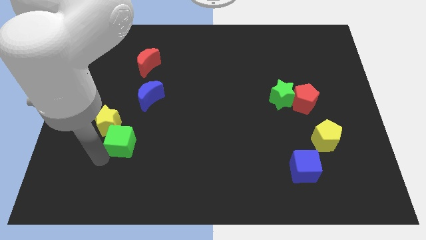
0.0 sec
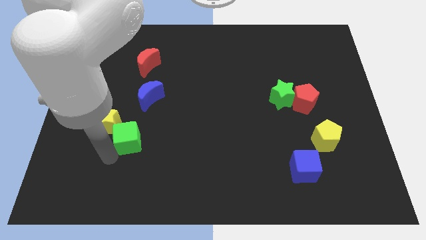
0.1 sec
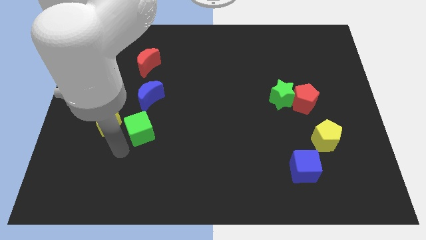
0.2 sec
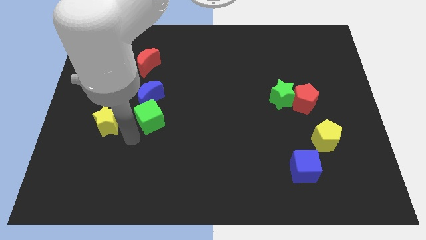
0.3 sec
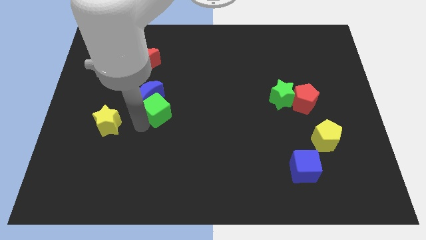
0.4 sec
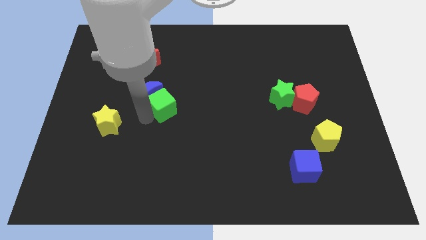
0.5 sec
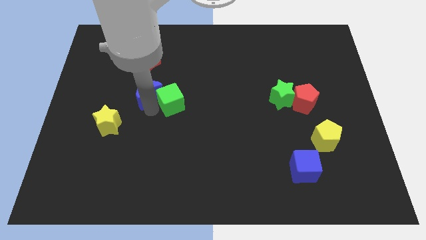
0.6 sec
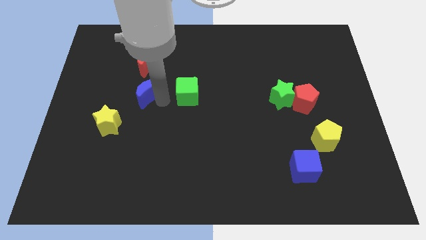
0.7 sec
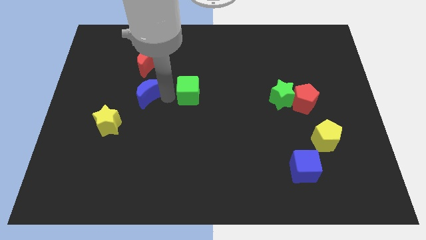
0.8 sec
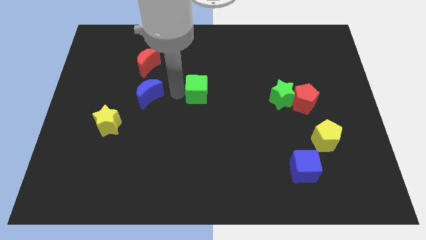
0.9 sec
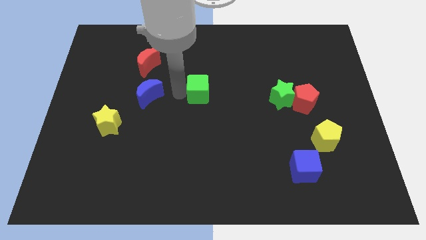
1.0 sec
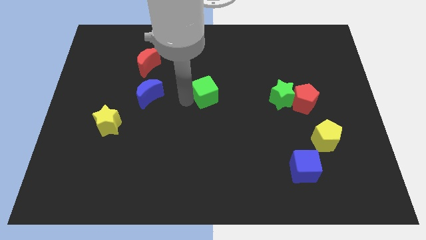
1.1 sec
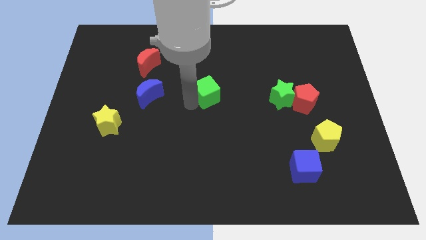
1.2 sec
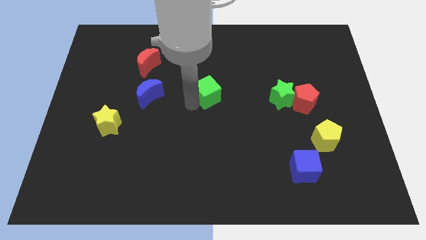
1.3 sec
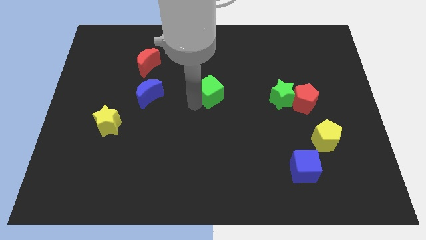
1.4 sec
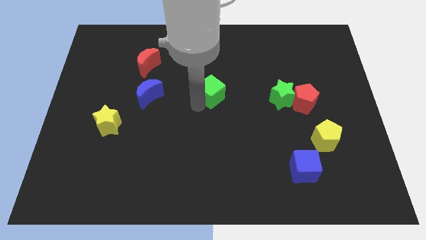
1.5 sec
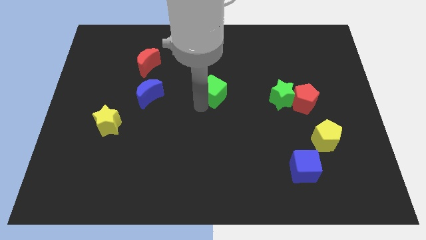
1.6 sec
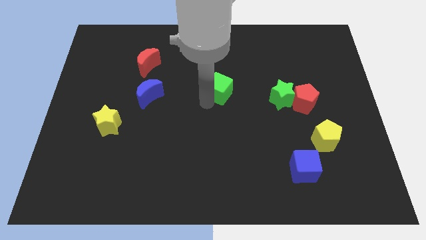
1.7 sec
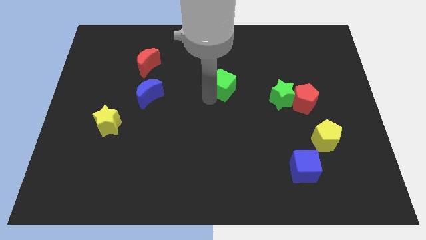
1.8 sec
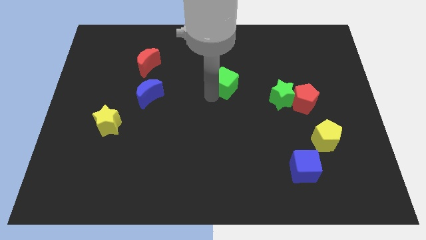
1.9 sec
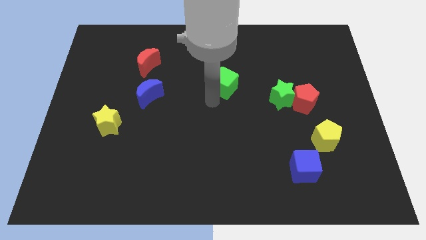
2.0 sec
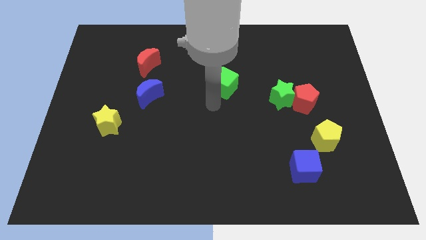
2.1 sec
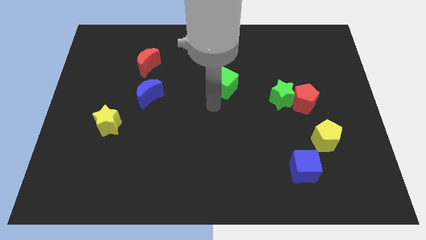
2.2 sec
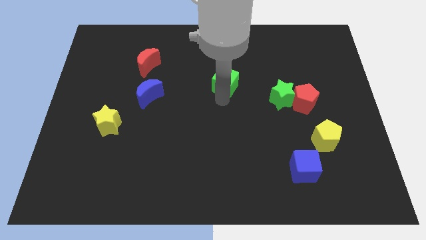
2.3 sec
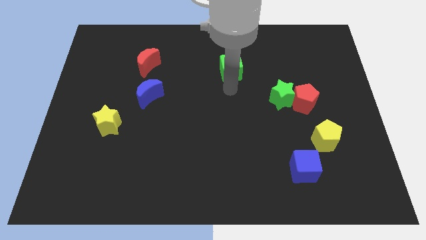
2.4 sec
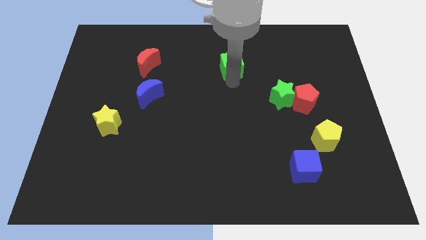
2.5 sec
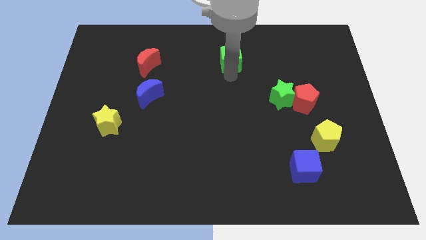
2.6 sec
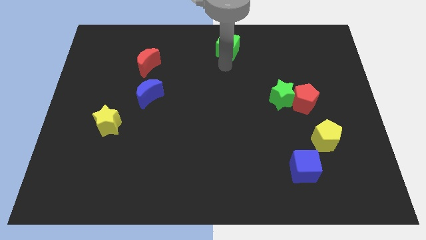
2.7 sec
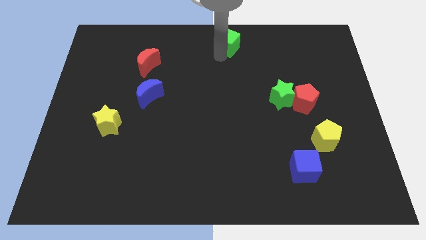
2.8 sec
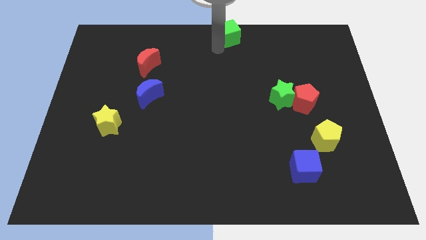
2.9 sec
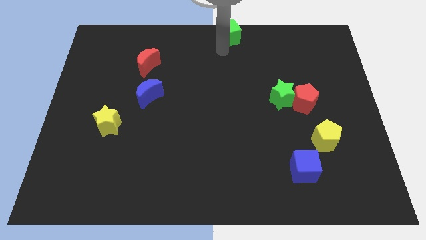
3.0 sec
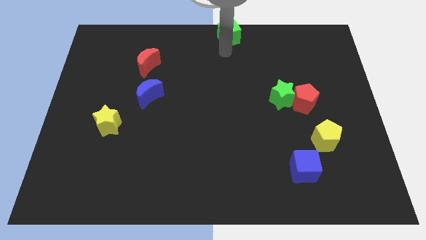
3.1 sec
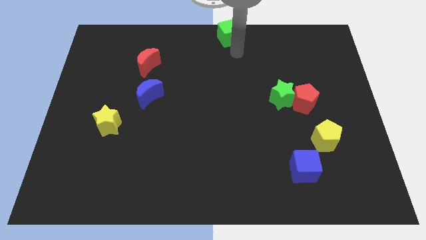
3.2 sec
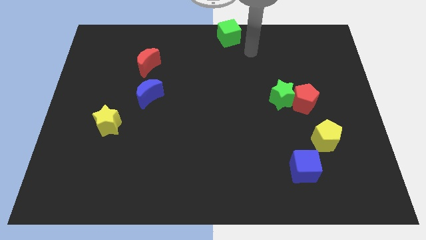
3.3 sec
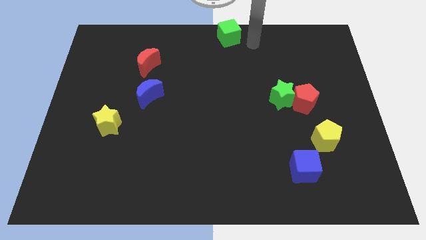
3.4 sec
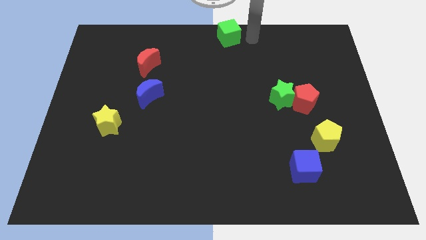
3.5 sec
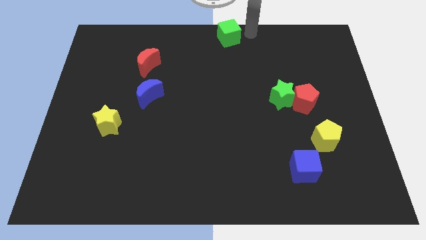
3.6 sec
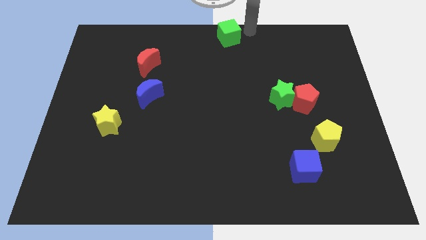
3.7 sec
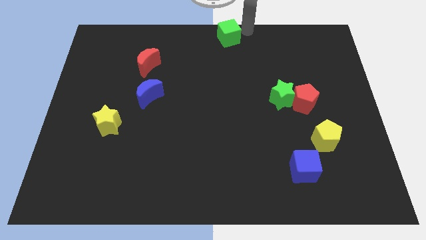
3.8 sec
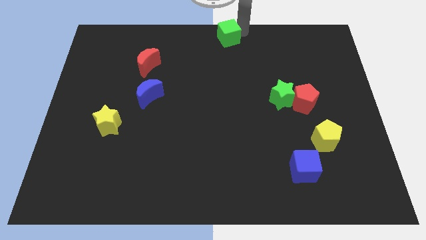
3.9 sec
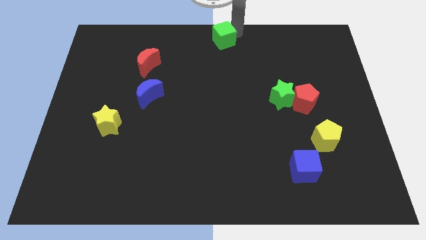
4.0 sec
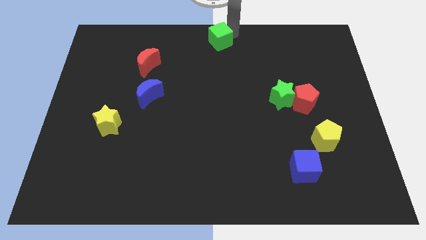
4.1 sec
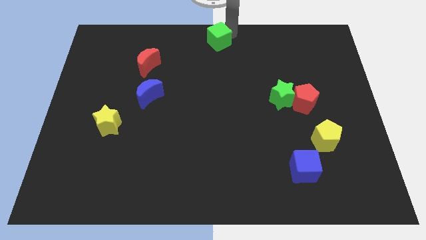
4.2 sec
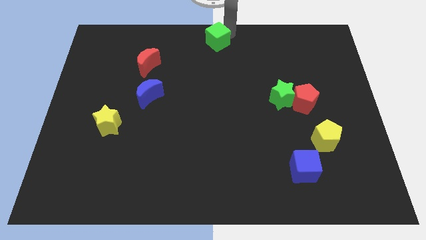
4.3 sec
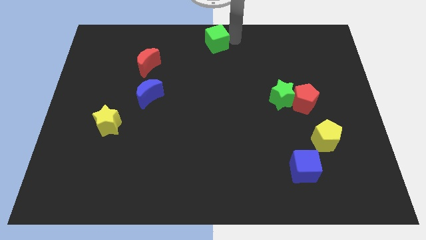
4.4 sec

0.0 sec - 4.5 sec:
place the green cube on top center

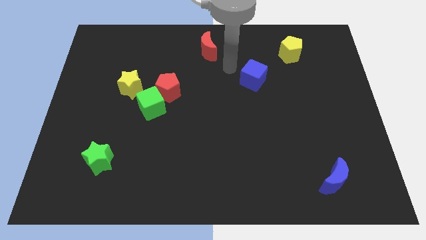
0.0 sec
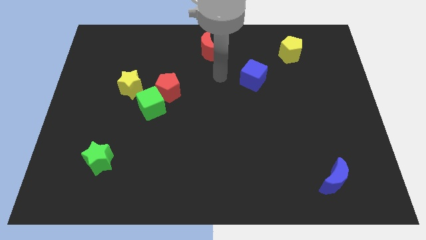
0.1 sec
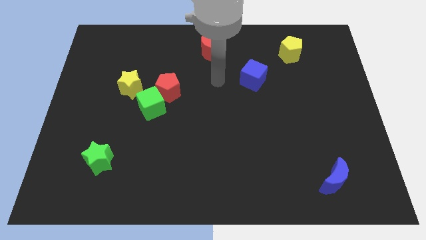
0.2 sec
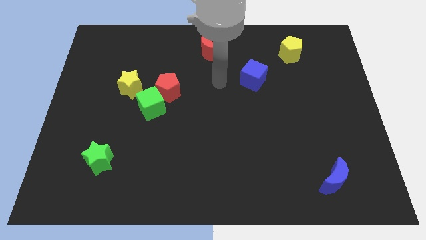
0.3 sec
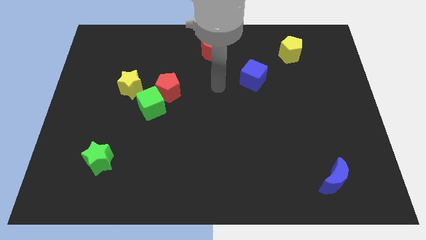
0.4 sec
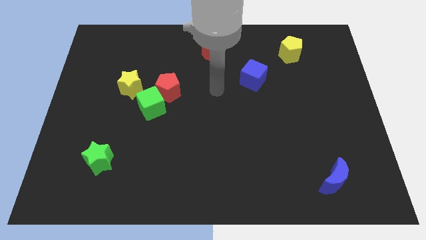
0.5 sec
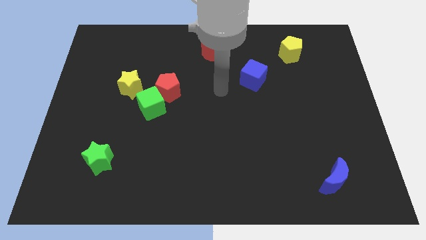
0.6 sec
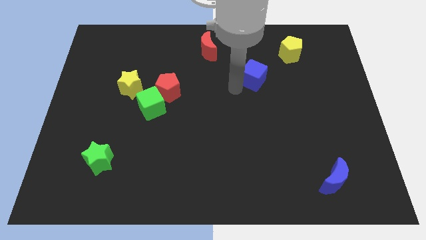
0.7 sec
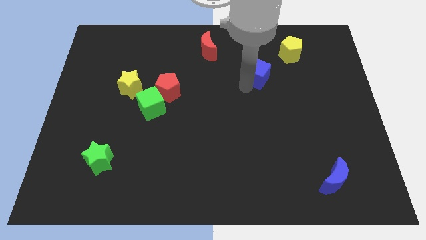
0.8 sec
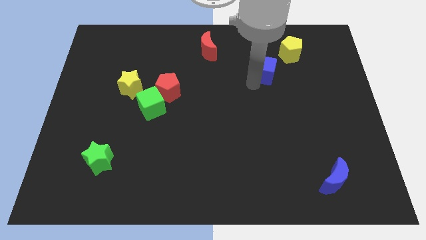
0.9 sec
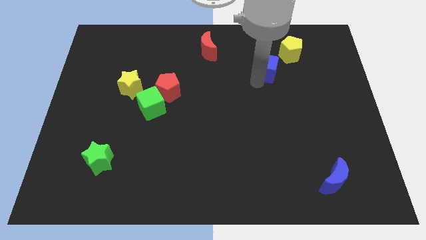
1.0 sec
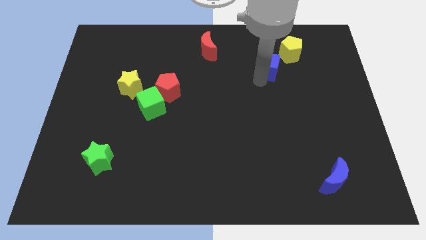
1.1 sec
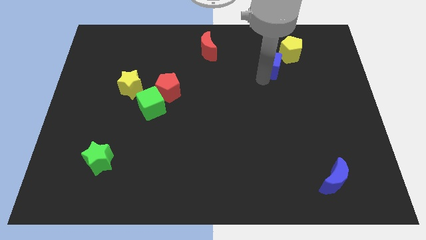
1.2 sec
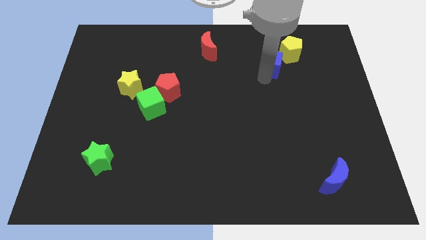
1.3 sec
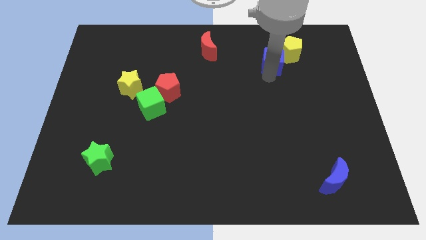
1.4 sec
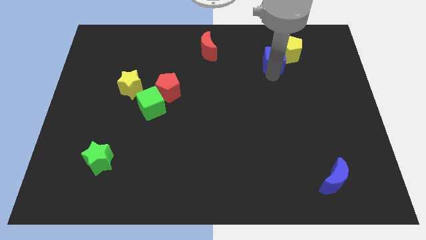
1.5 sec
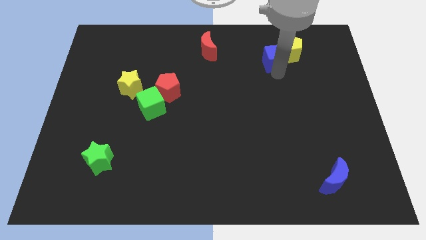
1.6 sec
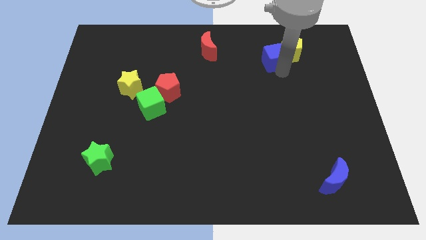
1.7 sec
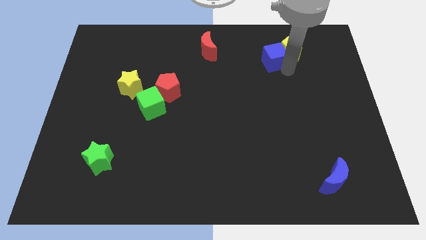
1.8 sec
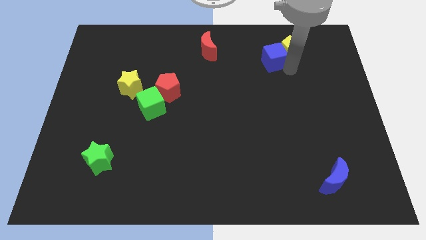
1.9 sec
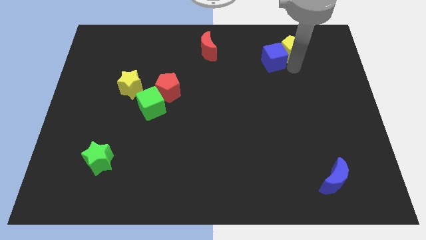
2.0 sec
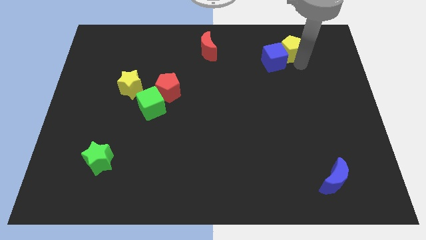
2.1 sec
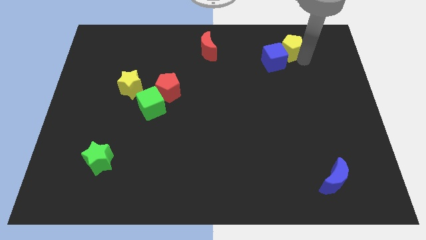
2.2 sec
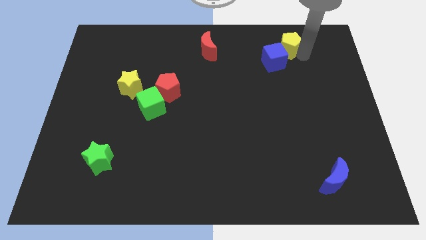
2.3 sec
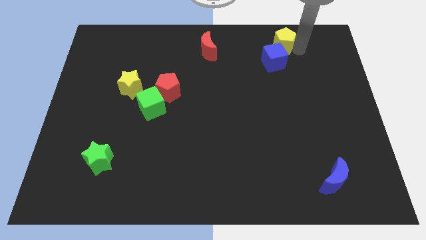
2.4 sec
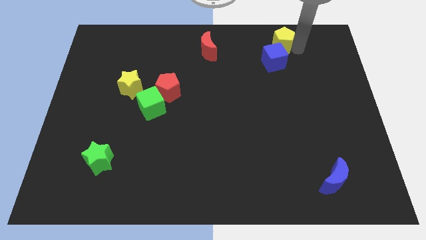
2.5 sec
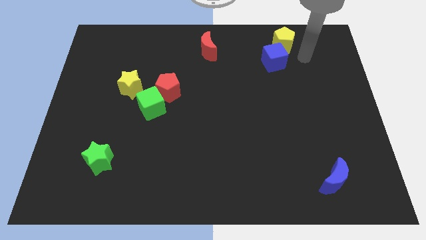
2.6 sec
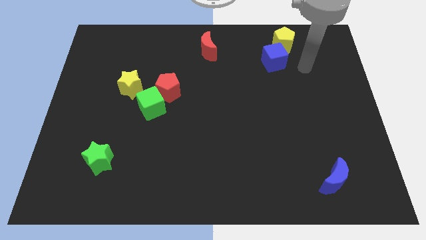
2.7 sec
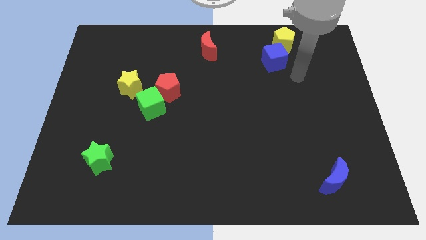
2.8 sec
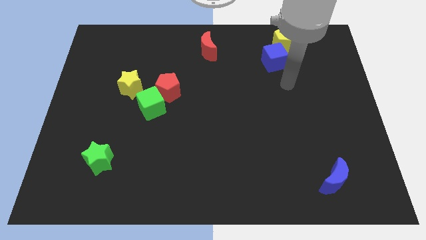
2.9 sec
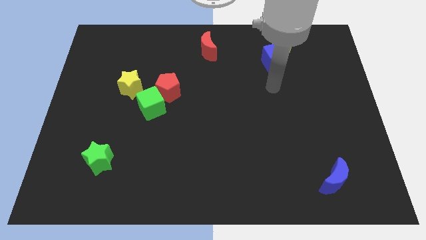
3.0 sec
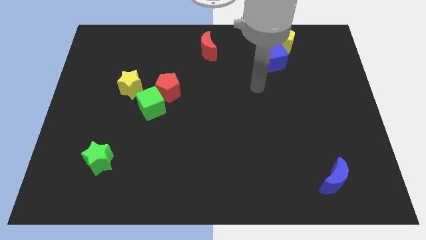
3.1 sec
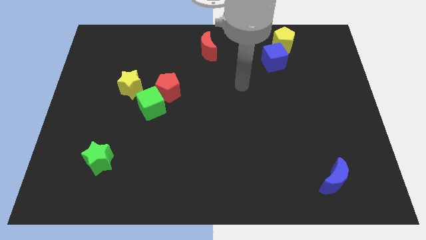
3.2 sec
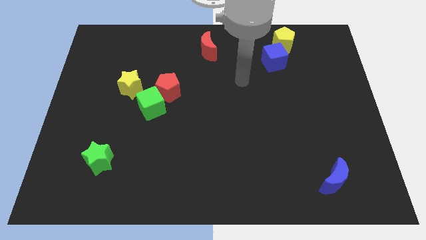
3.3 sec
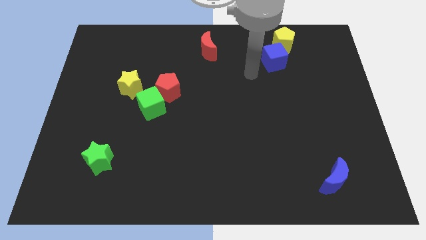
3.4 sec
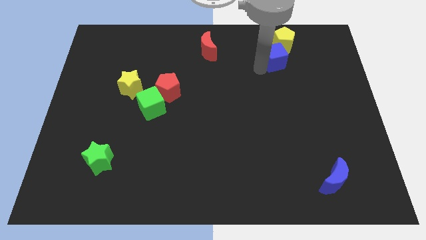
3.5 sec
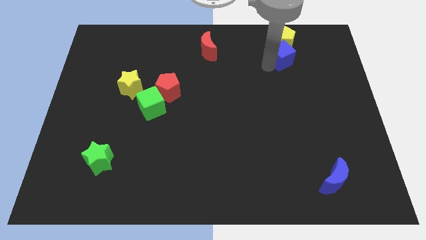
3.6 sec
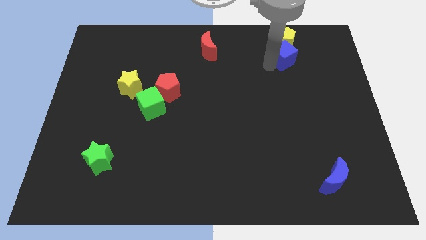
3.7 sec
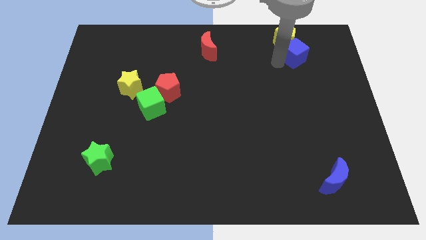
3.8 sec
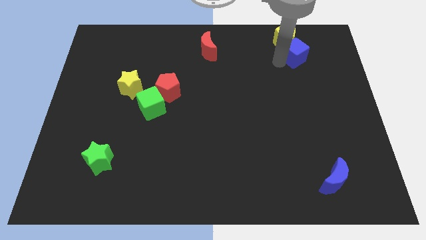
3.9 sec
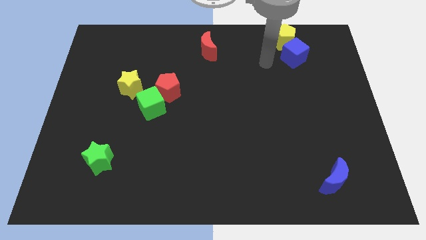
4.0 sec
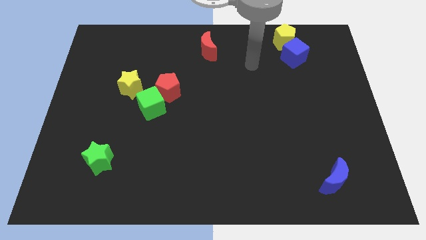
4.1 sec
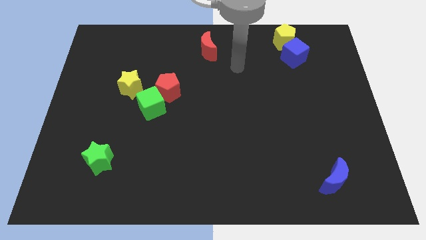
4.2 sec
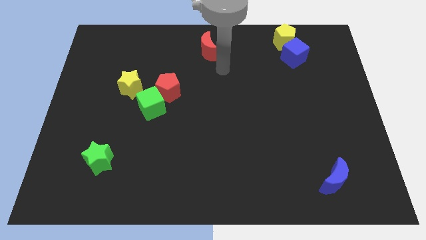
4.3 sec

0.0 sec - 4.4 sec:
push the blue cube into the yellow pentagon
